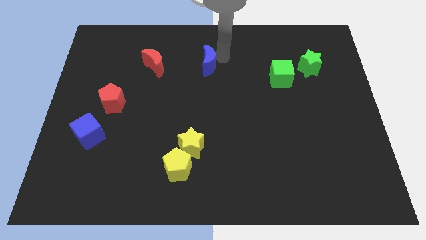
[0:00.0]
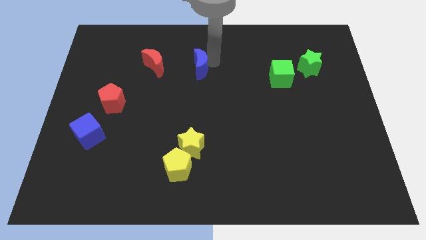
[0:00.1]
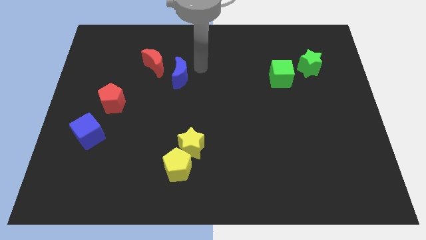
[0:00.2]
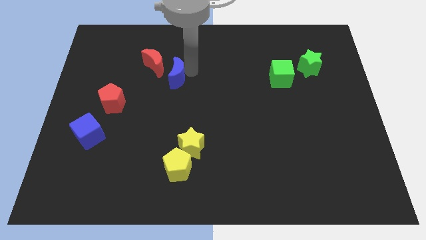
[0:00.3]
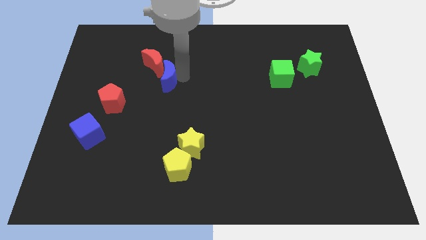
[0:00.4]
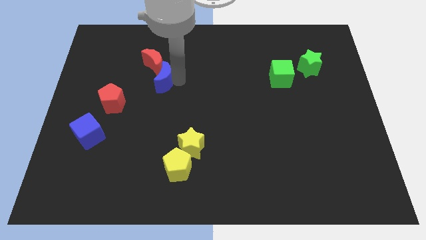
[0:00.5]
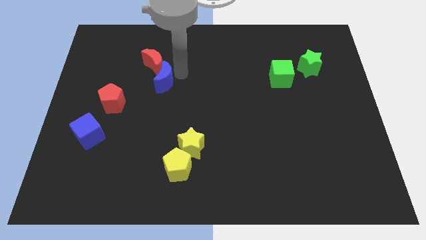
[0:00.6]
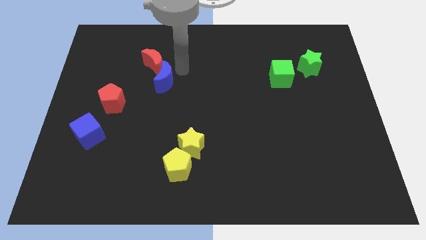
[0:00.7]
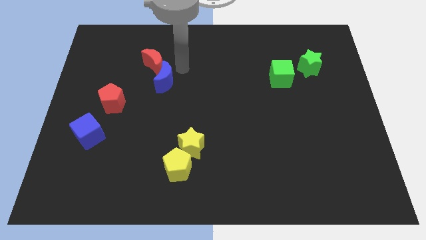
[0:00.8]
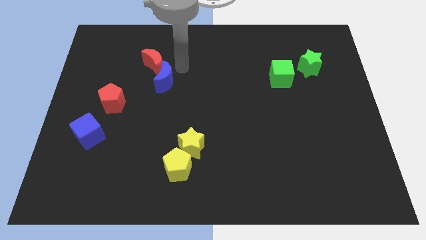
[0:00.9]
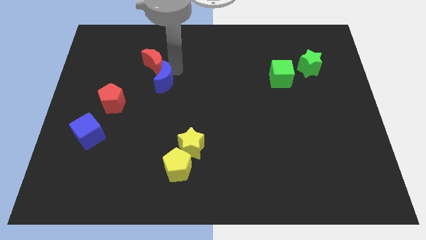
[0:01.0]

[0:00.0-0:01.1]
push blue crescent towards the red crescent

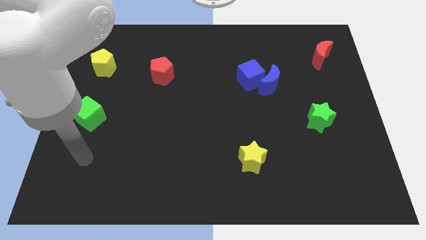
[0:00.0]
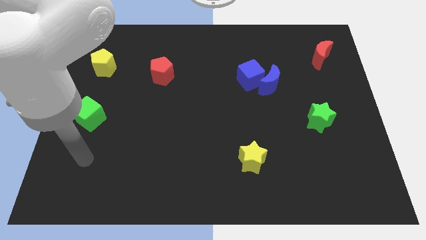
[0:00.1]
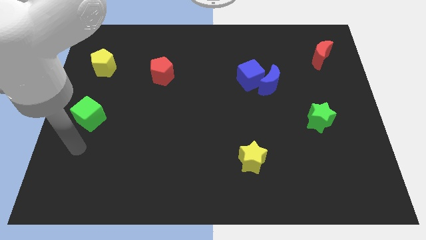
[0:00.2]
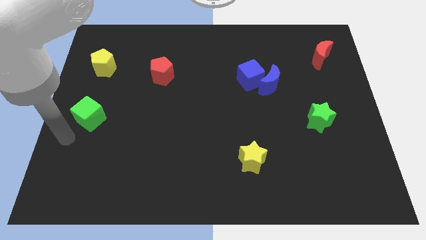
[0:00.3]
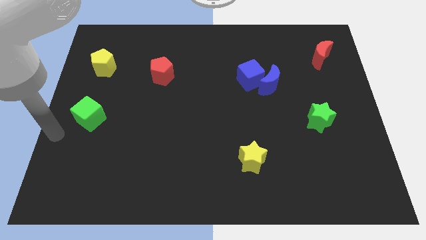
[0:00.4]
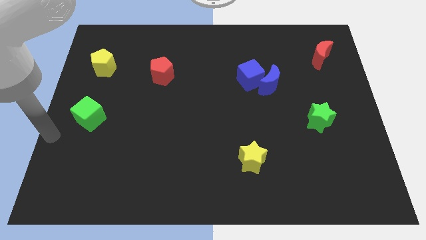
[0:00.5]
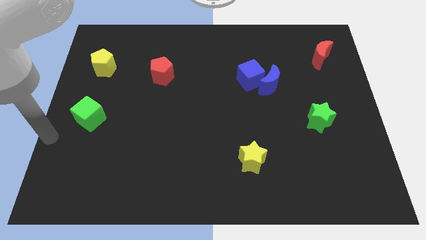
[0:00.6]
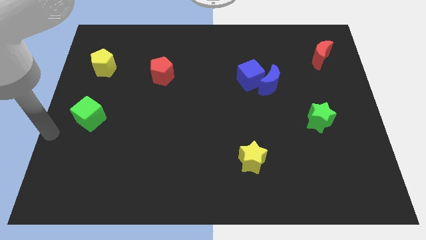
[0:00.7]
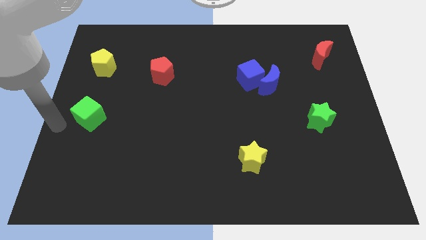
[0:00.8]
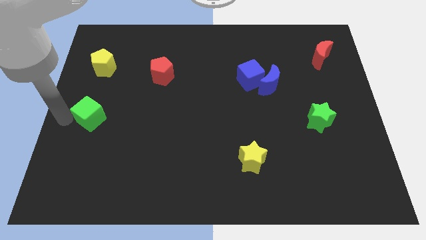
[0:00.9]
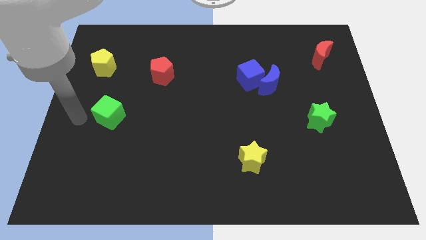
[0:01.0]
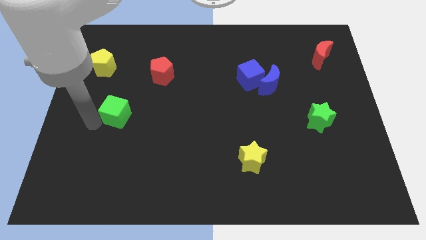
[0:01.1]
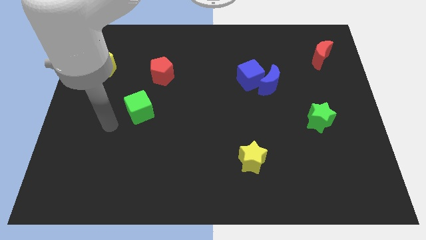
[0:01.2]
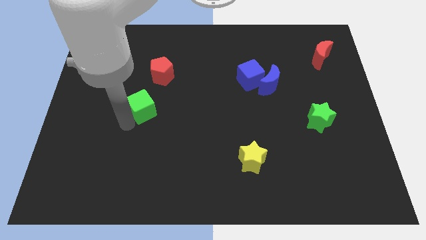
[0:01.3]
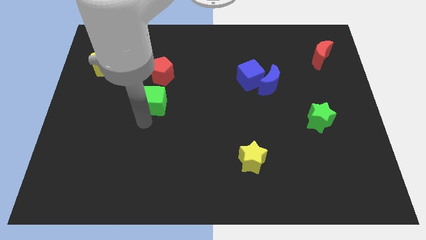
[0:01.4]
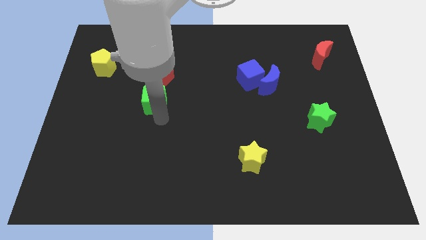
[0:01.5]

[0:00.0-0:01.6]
place the green cube below the red pentagon

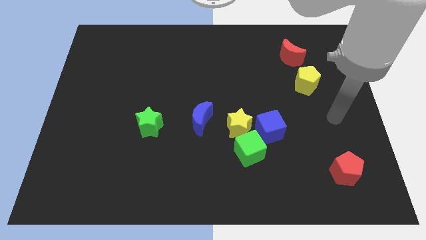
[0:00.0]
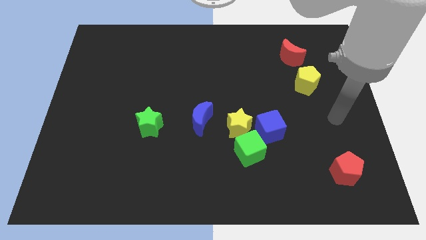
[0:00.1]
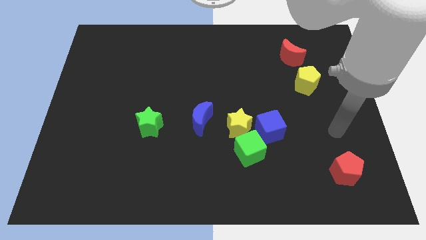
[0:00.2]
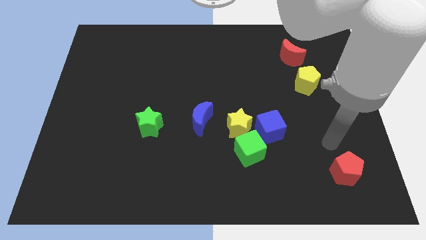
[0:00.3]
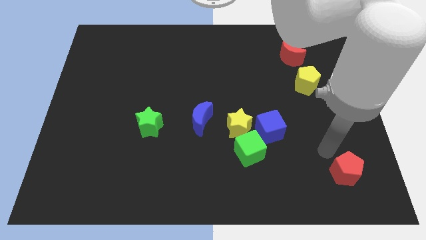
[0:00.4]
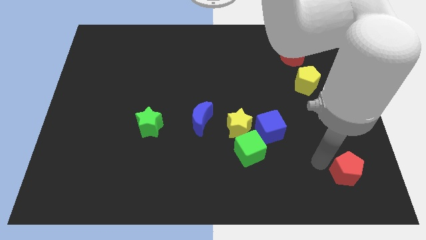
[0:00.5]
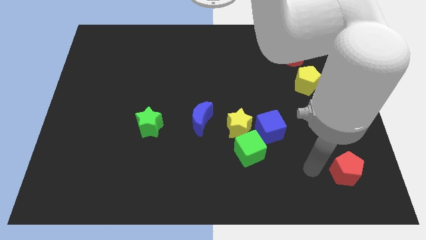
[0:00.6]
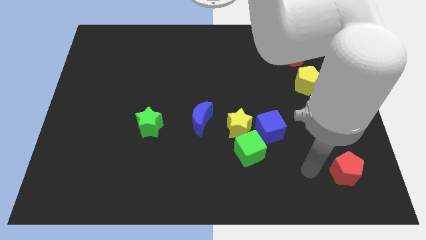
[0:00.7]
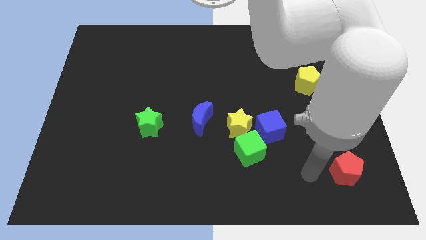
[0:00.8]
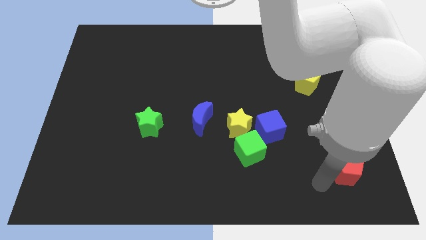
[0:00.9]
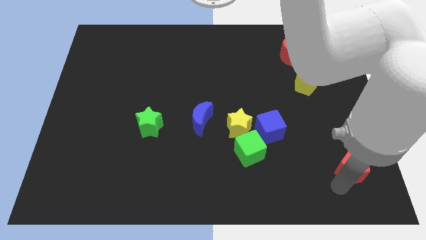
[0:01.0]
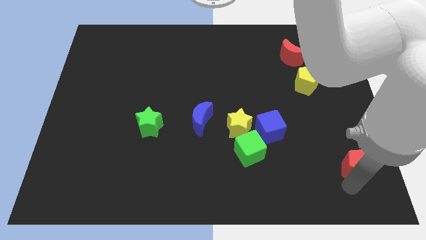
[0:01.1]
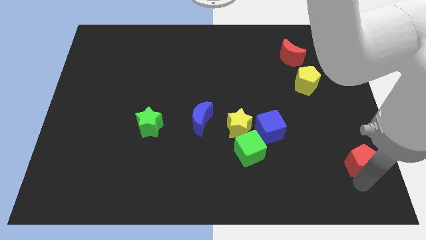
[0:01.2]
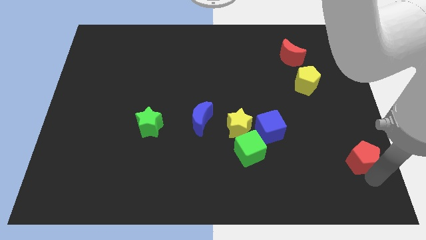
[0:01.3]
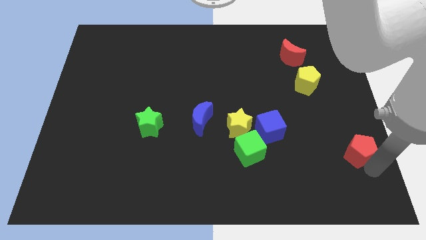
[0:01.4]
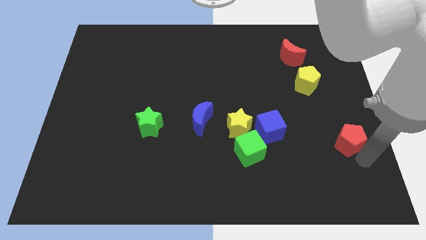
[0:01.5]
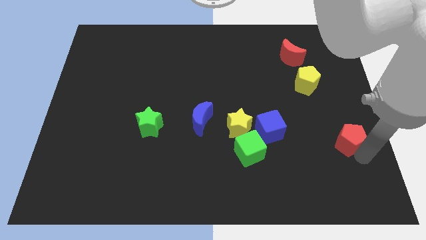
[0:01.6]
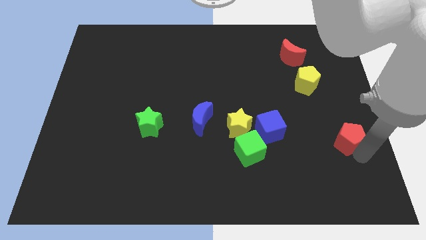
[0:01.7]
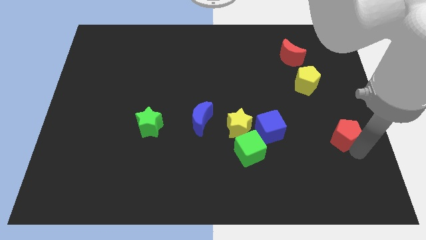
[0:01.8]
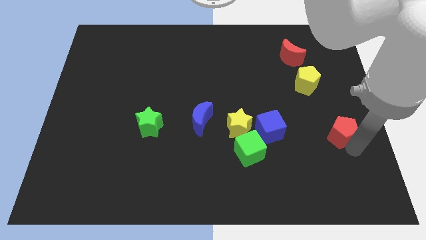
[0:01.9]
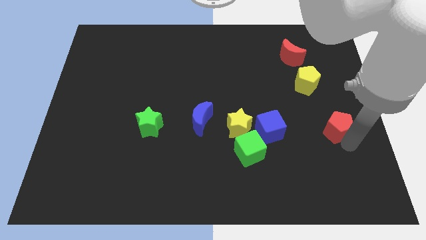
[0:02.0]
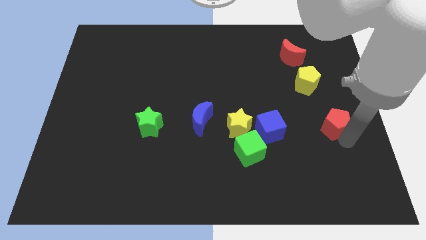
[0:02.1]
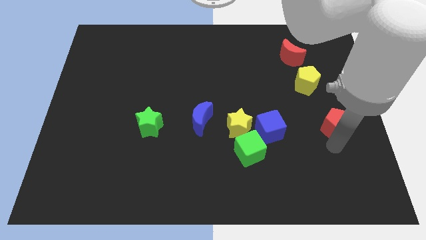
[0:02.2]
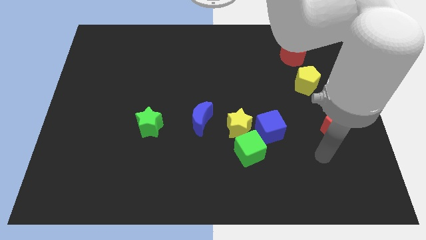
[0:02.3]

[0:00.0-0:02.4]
push the red pentagon towards the right of blue cube

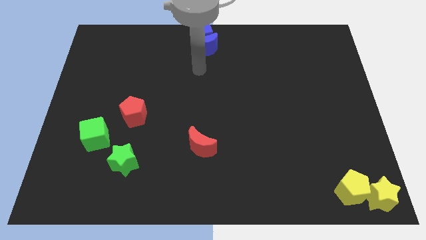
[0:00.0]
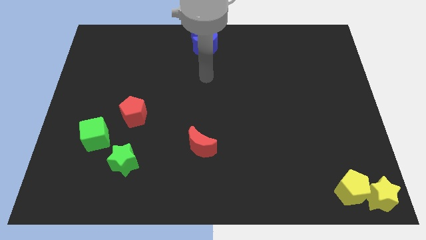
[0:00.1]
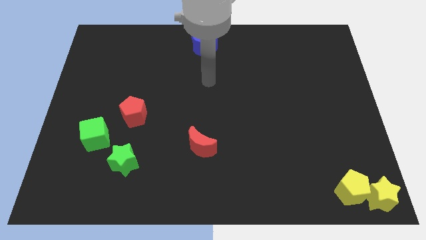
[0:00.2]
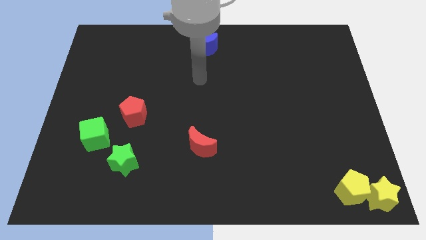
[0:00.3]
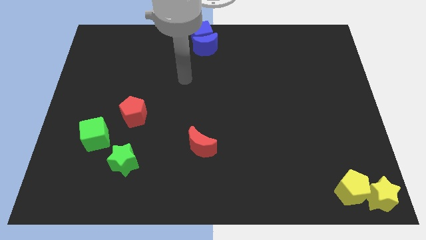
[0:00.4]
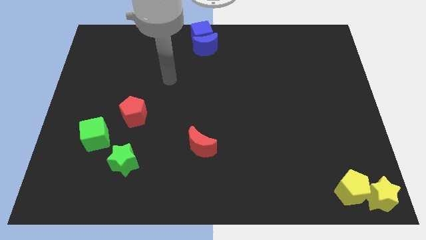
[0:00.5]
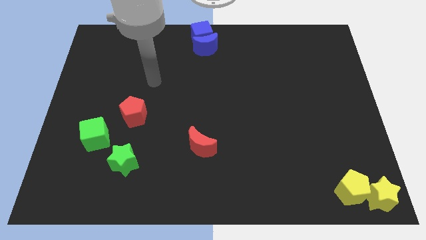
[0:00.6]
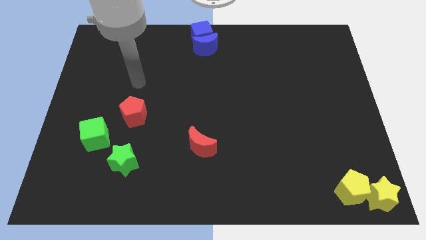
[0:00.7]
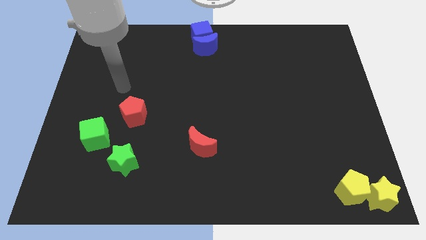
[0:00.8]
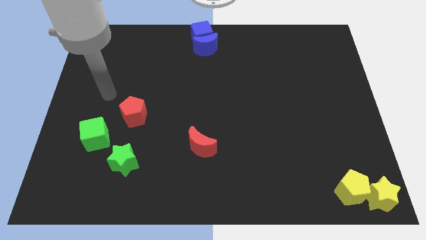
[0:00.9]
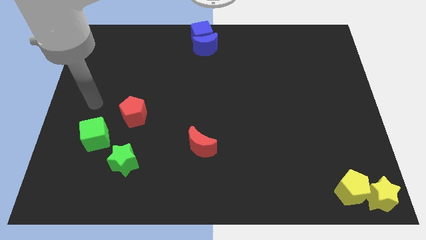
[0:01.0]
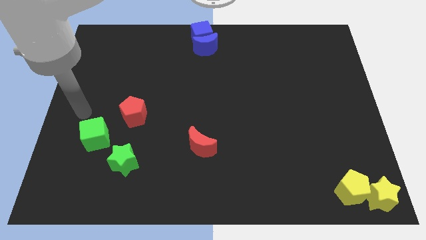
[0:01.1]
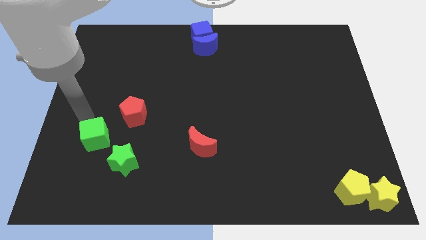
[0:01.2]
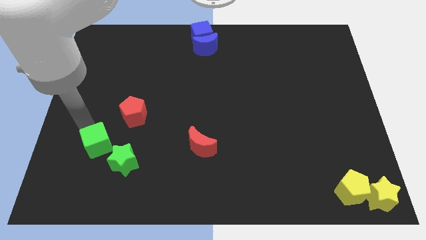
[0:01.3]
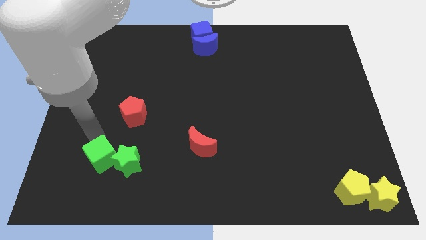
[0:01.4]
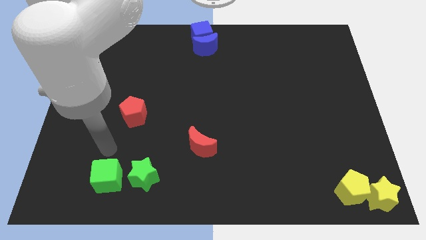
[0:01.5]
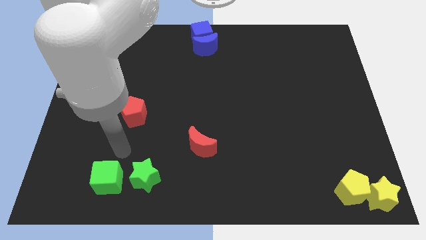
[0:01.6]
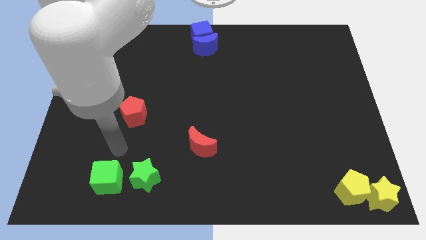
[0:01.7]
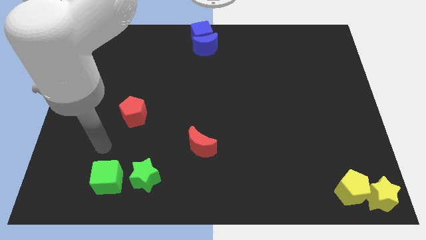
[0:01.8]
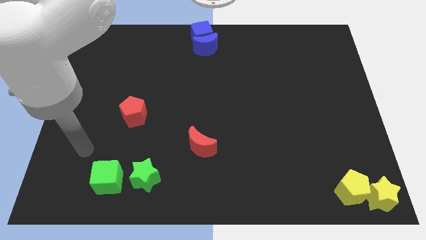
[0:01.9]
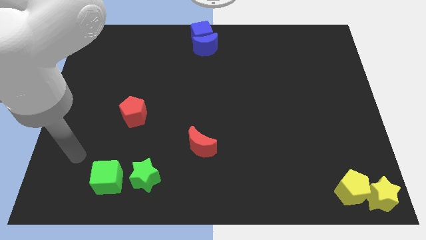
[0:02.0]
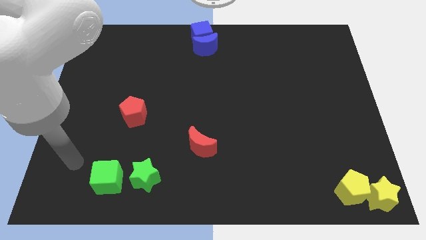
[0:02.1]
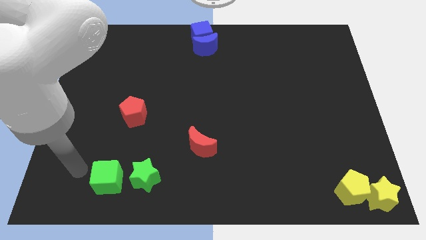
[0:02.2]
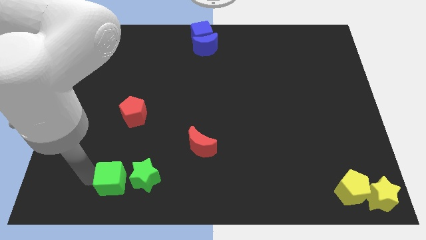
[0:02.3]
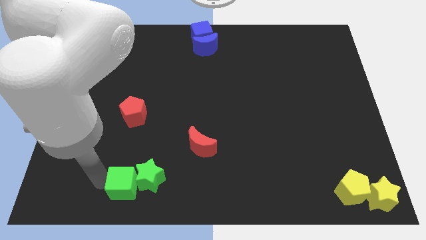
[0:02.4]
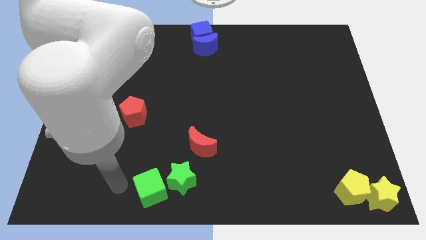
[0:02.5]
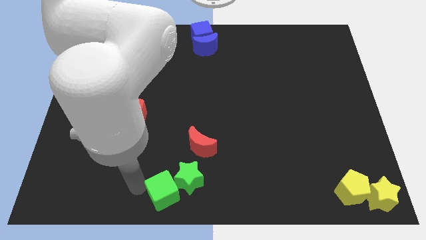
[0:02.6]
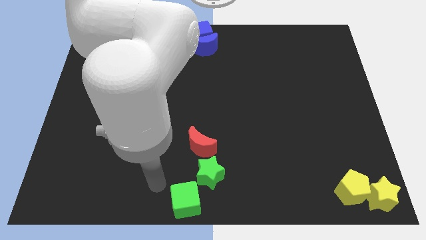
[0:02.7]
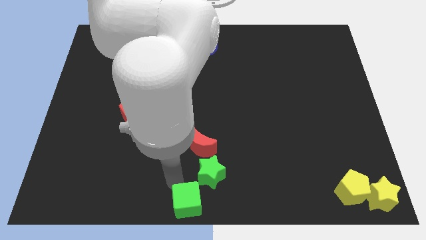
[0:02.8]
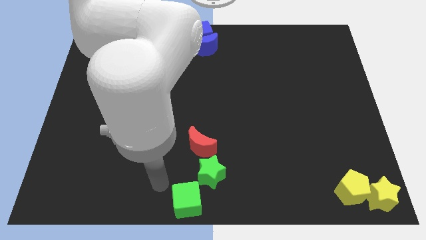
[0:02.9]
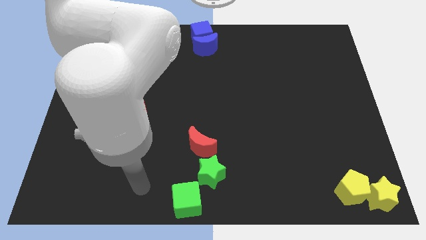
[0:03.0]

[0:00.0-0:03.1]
move the green blocks to the bottom side of the red moon

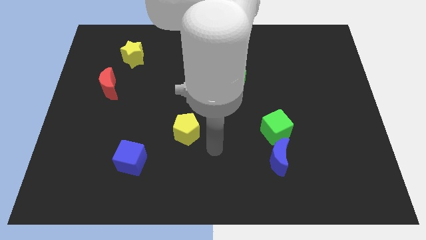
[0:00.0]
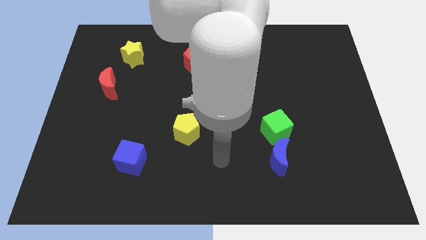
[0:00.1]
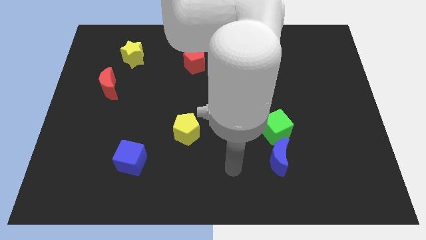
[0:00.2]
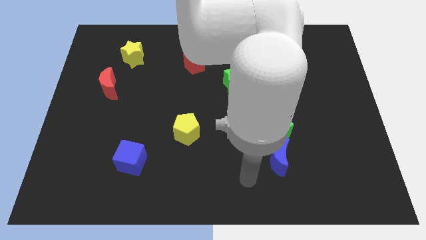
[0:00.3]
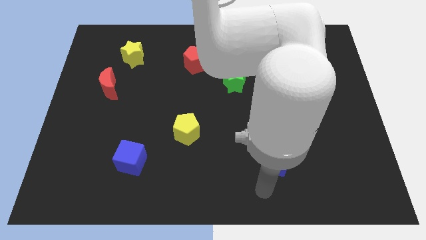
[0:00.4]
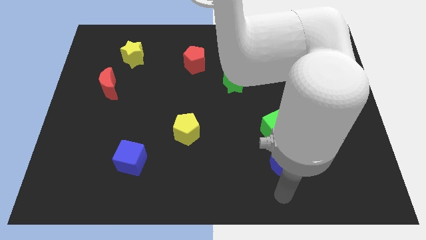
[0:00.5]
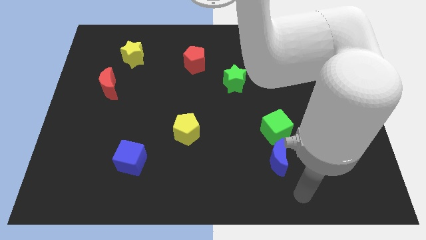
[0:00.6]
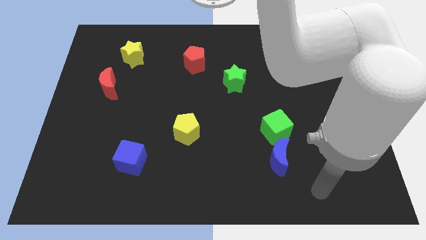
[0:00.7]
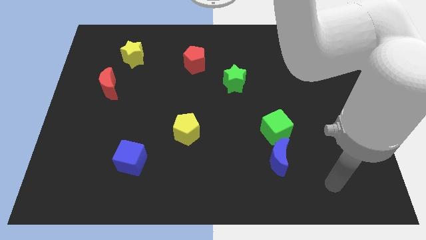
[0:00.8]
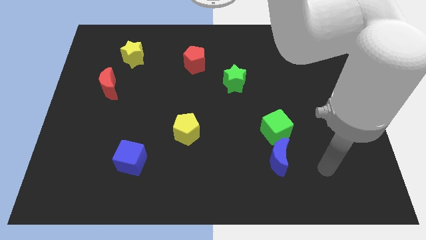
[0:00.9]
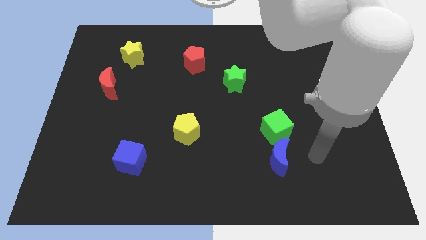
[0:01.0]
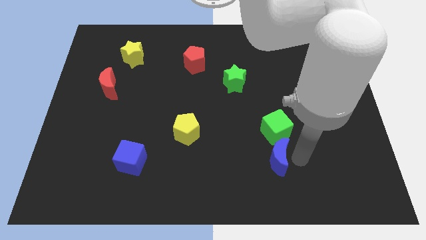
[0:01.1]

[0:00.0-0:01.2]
move your arm to the right of the blue moon
